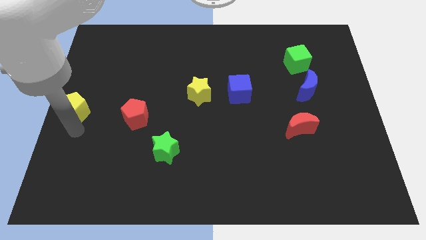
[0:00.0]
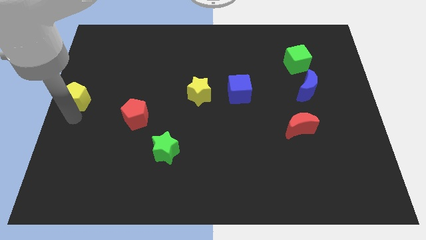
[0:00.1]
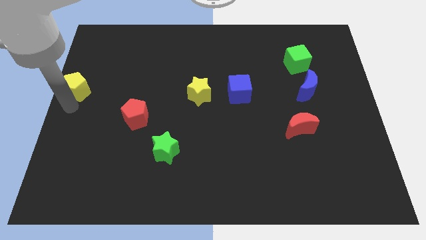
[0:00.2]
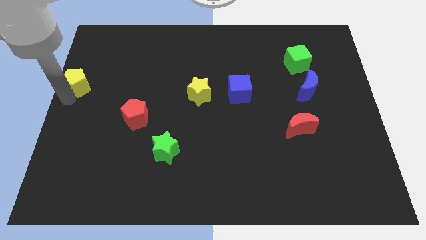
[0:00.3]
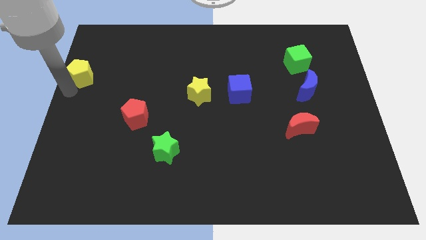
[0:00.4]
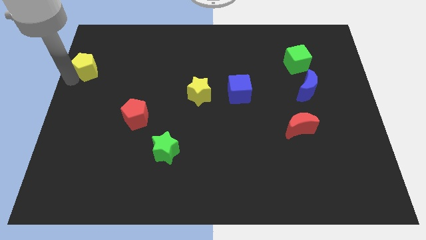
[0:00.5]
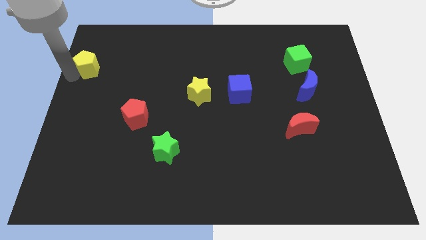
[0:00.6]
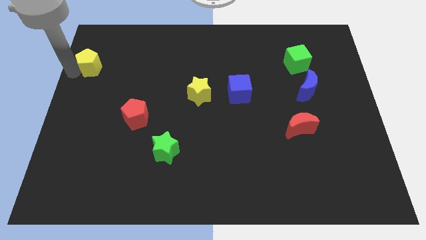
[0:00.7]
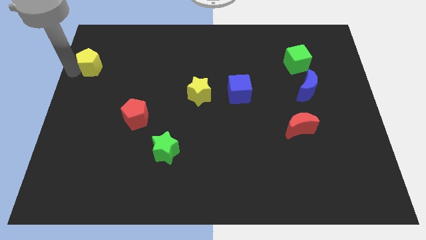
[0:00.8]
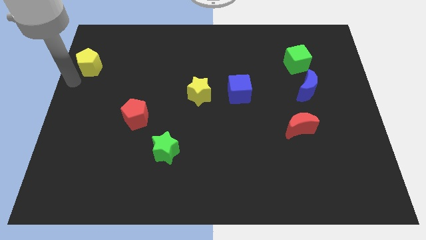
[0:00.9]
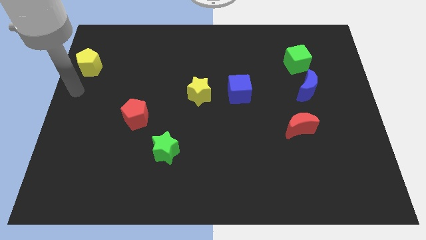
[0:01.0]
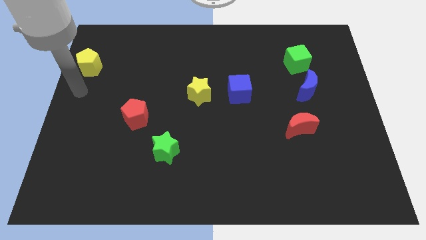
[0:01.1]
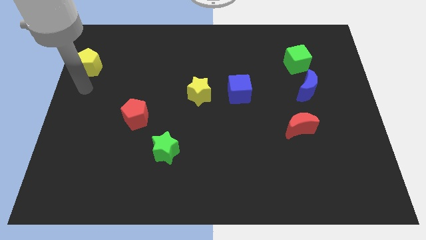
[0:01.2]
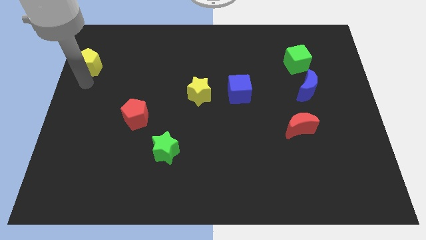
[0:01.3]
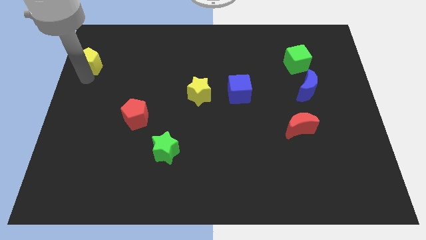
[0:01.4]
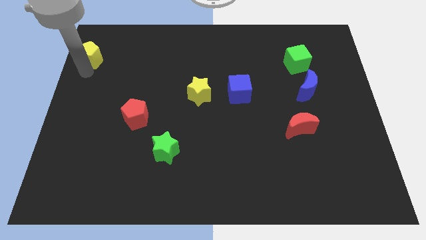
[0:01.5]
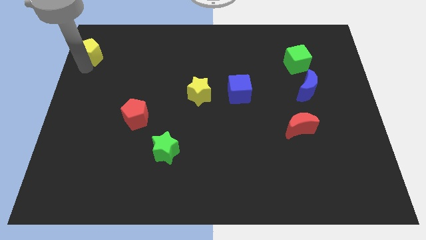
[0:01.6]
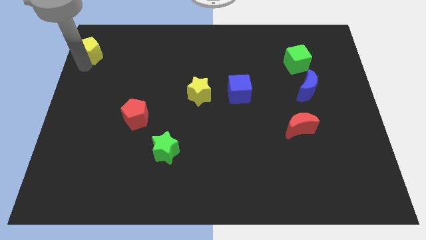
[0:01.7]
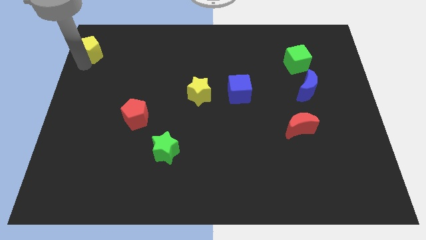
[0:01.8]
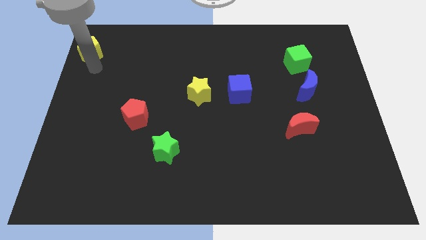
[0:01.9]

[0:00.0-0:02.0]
push yellow pentagon towards top left corner of the board

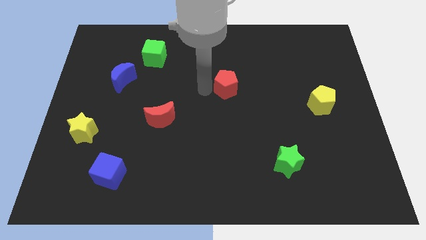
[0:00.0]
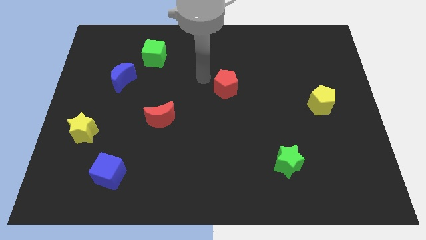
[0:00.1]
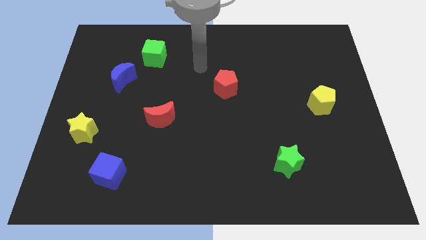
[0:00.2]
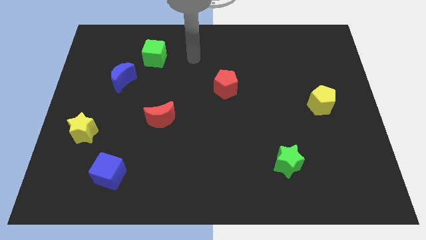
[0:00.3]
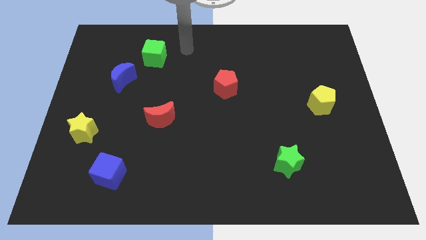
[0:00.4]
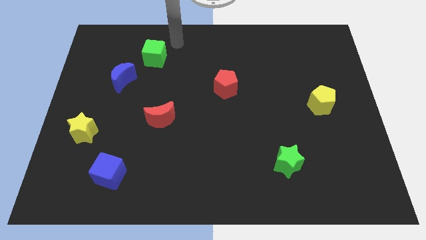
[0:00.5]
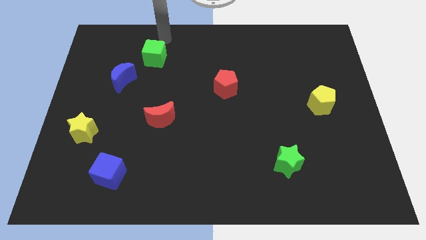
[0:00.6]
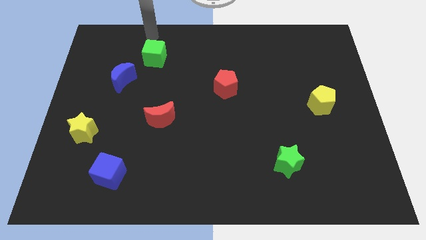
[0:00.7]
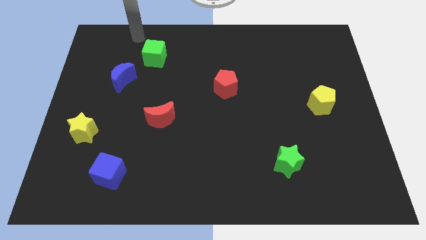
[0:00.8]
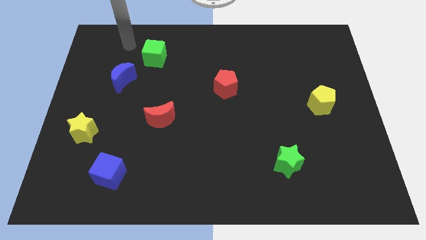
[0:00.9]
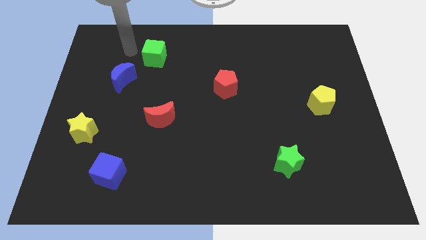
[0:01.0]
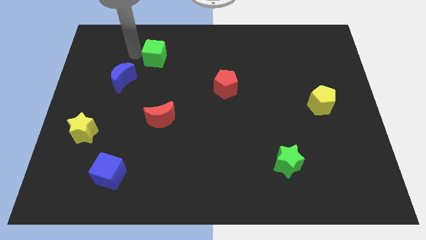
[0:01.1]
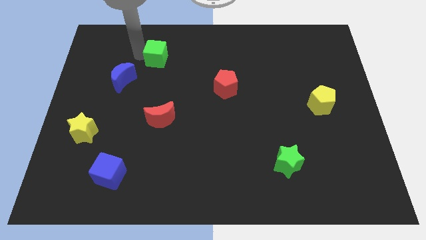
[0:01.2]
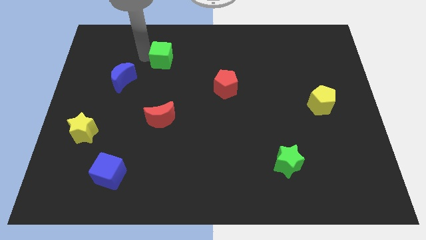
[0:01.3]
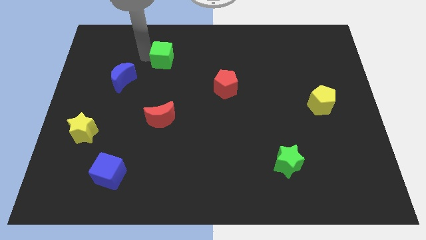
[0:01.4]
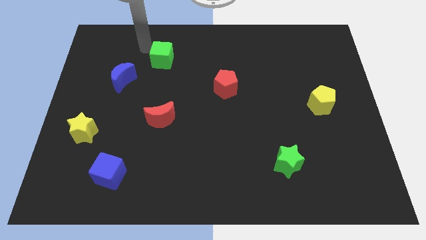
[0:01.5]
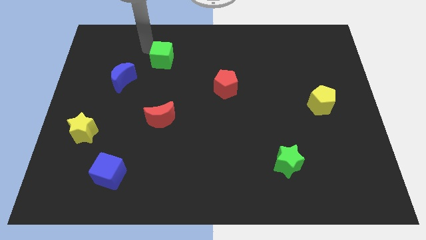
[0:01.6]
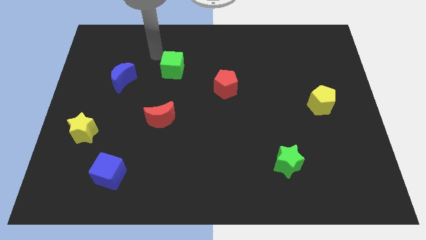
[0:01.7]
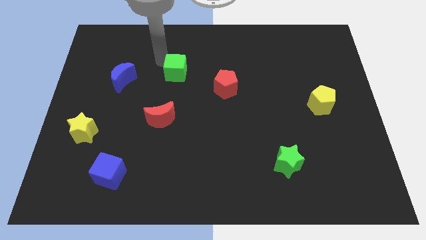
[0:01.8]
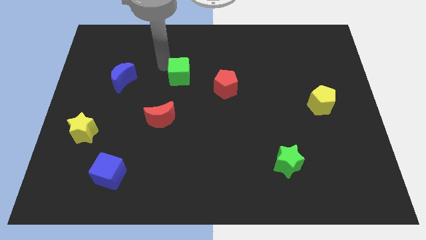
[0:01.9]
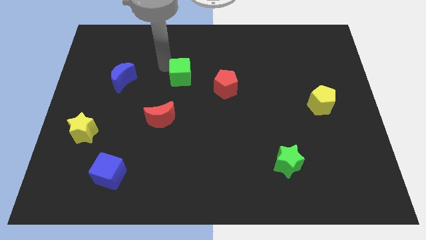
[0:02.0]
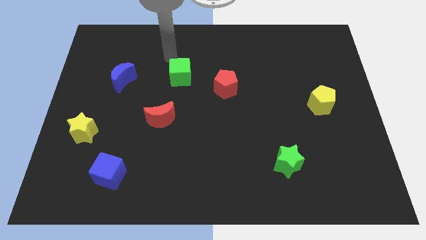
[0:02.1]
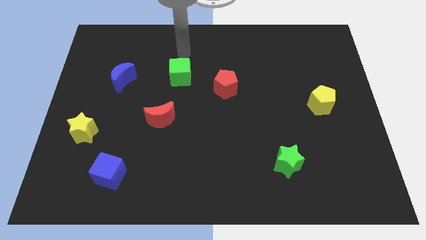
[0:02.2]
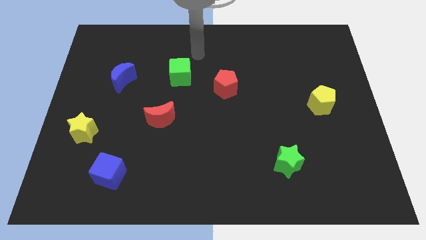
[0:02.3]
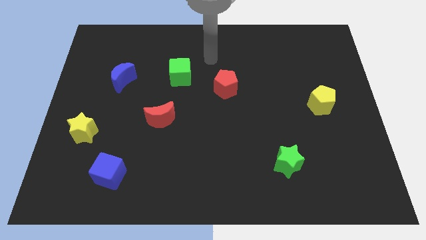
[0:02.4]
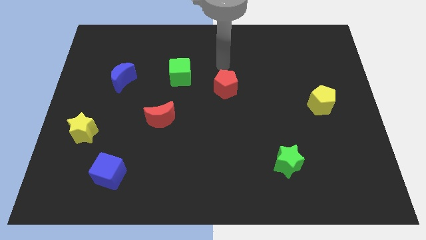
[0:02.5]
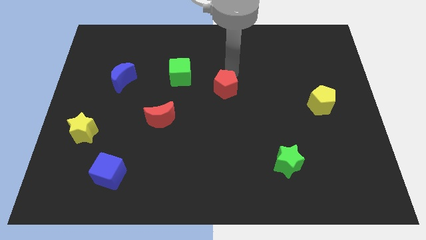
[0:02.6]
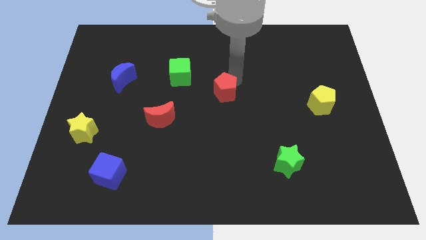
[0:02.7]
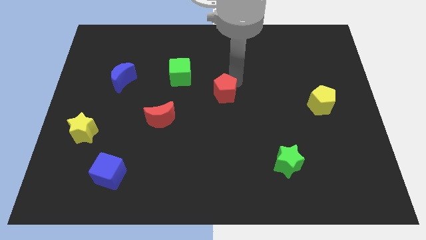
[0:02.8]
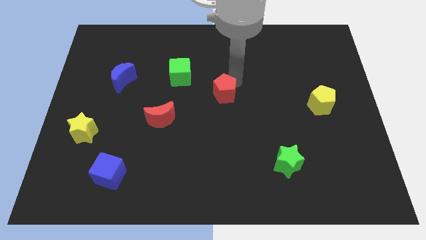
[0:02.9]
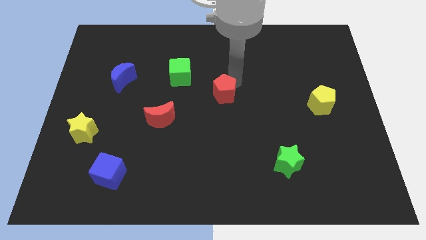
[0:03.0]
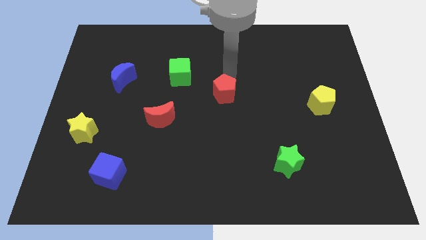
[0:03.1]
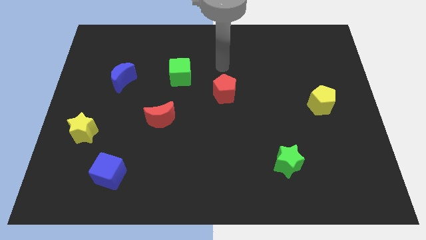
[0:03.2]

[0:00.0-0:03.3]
put green cube and red pentagon in a diagonal line

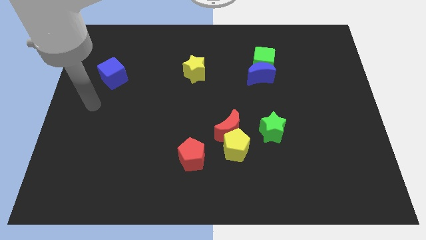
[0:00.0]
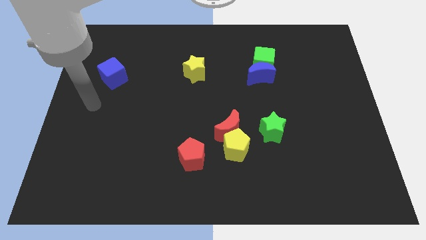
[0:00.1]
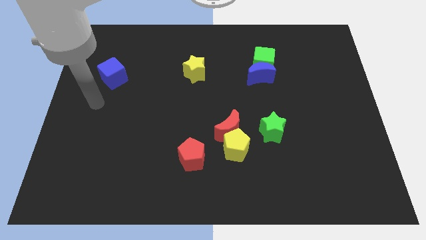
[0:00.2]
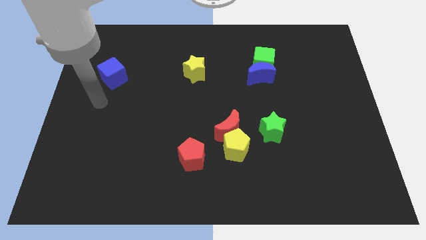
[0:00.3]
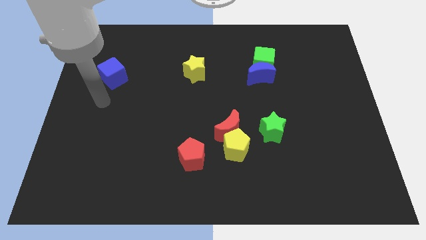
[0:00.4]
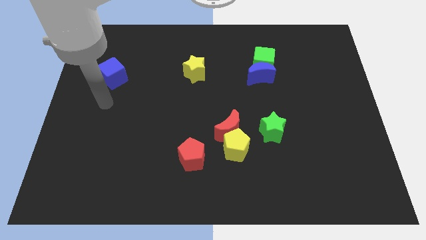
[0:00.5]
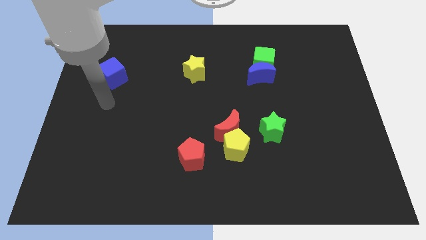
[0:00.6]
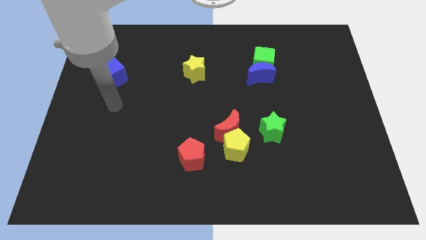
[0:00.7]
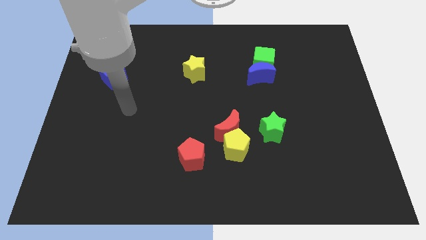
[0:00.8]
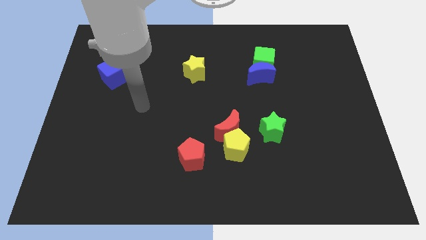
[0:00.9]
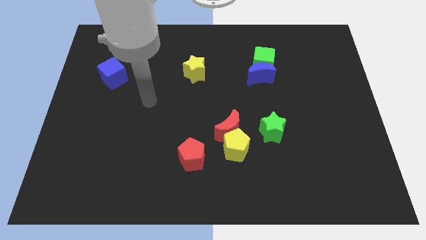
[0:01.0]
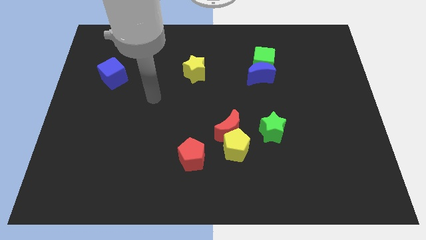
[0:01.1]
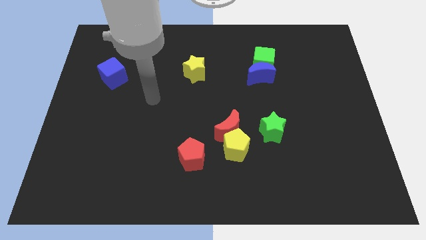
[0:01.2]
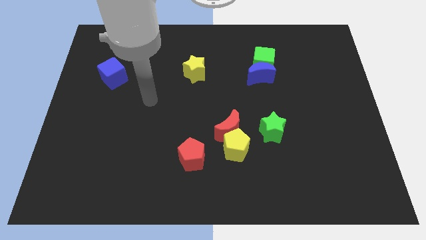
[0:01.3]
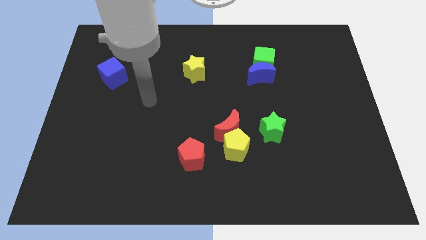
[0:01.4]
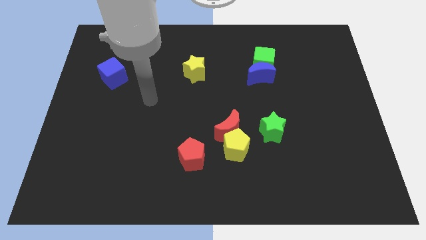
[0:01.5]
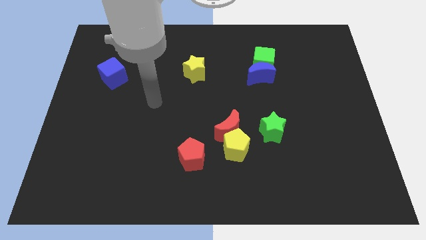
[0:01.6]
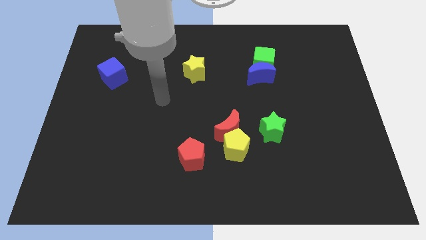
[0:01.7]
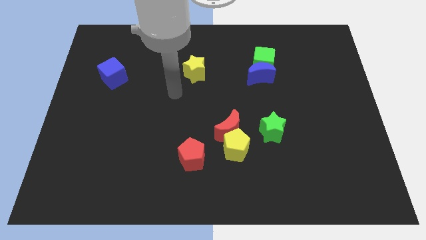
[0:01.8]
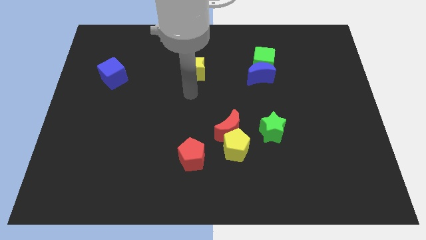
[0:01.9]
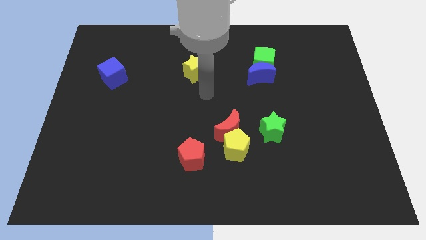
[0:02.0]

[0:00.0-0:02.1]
point your arm at the bottom side of the yellow star

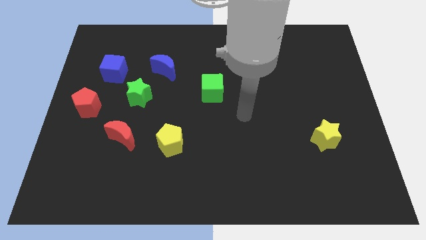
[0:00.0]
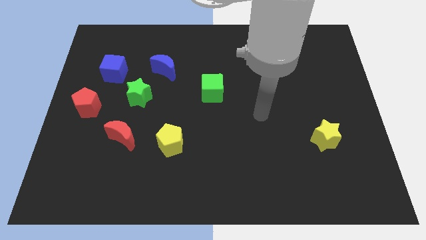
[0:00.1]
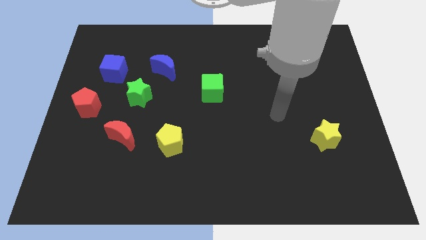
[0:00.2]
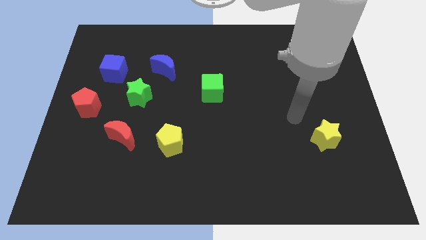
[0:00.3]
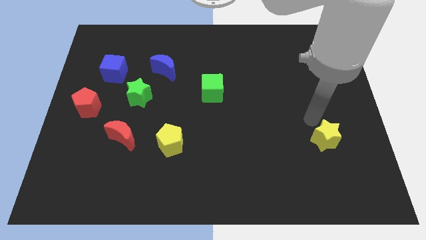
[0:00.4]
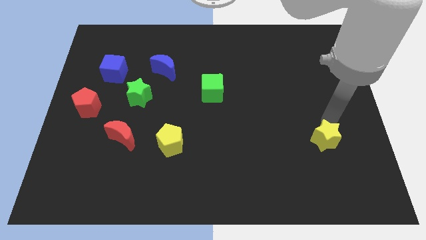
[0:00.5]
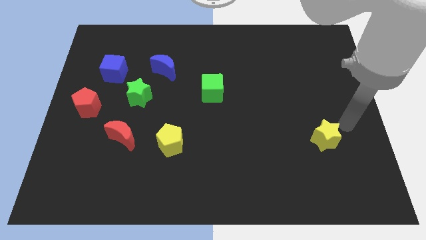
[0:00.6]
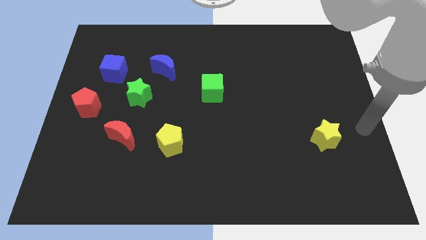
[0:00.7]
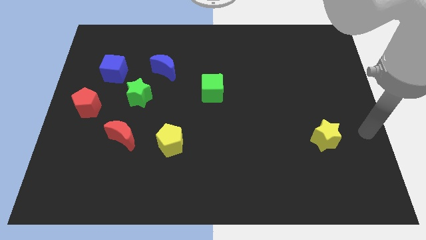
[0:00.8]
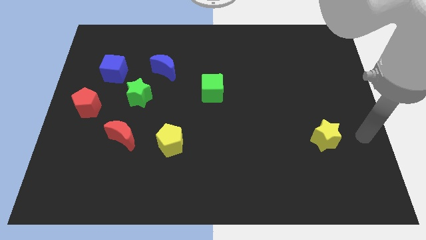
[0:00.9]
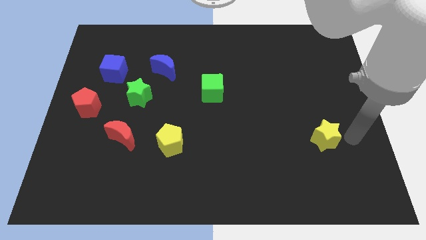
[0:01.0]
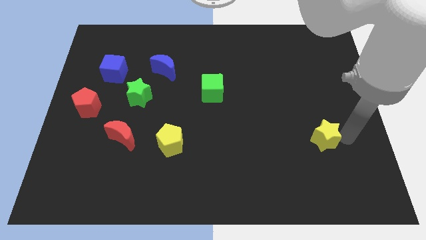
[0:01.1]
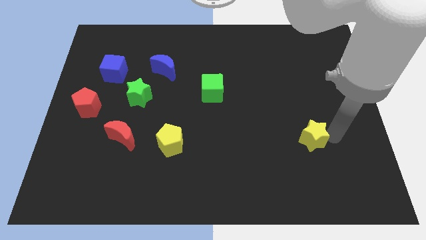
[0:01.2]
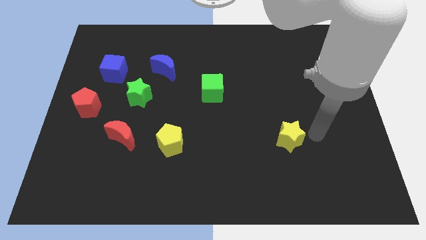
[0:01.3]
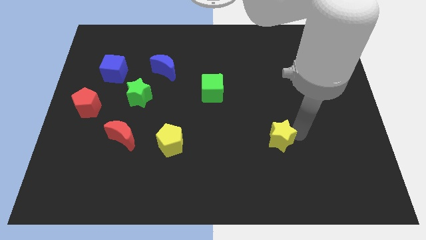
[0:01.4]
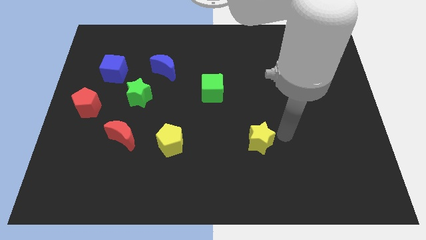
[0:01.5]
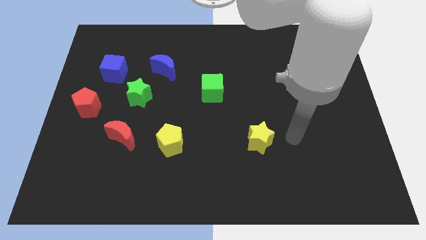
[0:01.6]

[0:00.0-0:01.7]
move the yellow star towards the yellow pentagon
